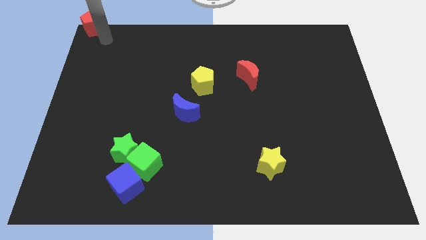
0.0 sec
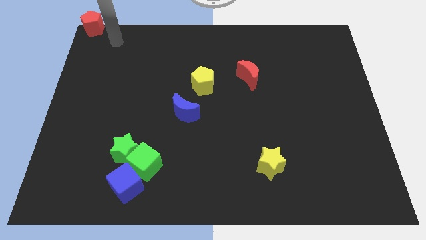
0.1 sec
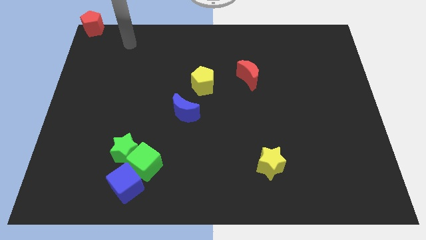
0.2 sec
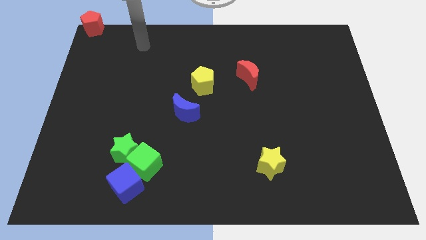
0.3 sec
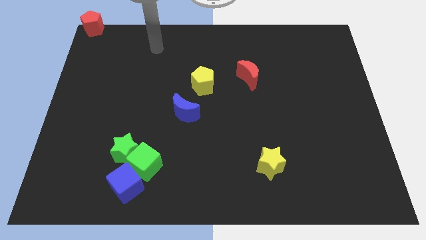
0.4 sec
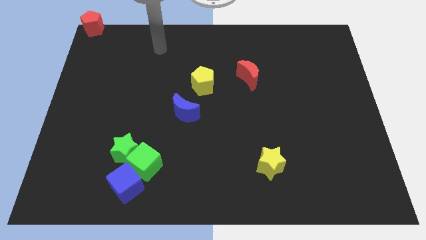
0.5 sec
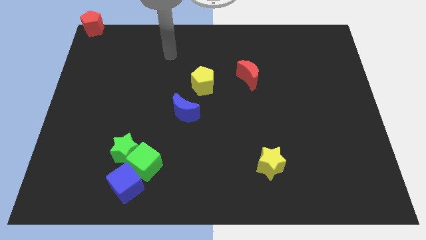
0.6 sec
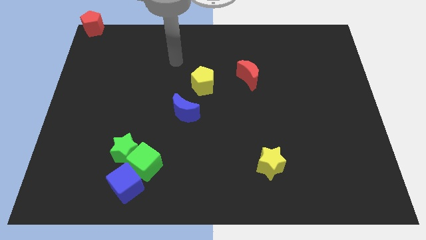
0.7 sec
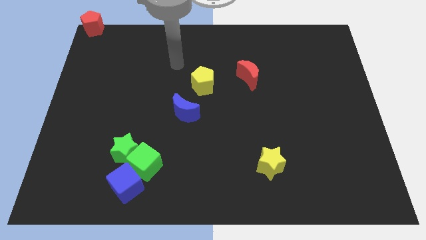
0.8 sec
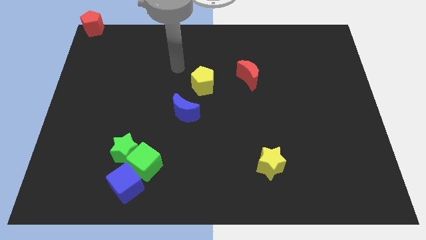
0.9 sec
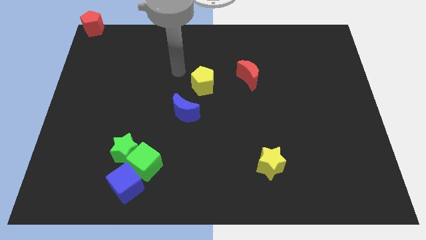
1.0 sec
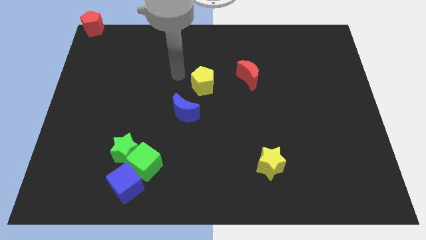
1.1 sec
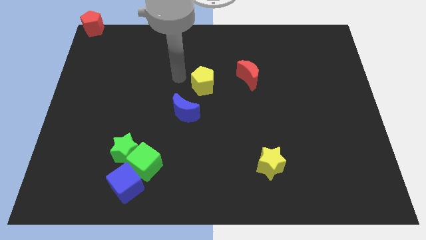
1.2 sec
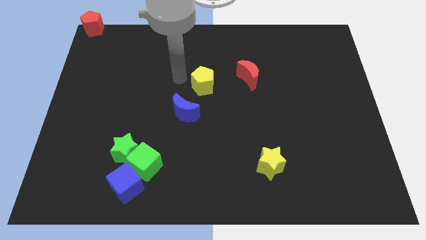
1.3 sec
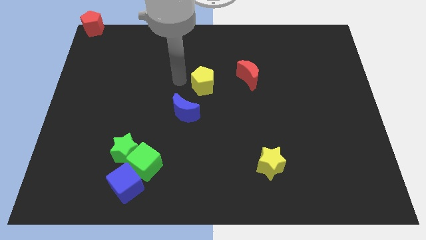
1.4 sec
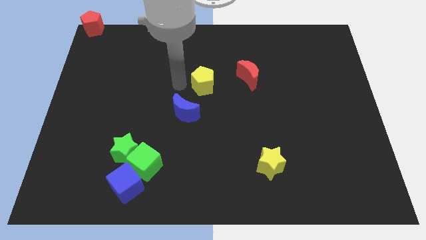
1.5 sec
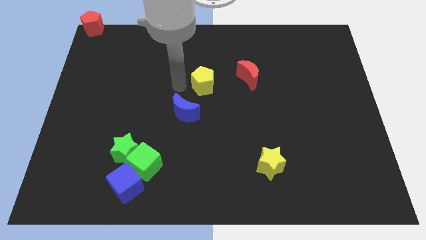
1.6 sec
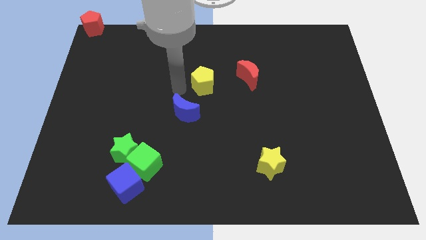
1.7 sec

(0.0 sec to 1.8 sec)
move the arm to the left of the yellow pentagon

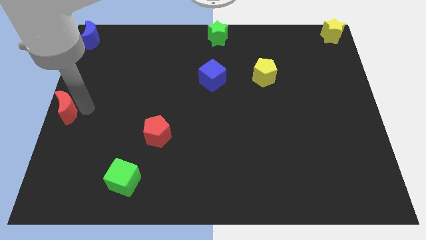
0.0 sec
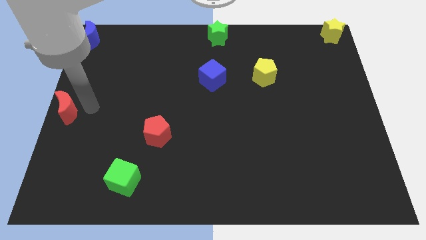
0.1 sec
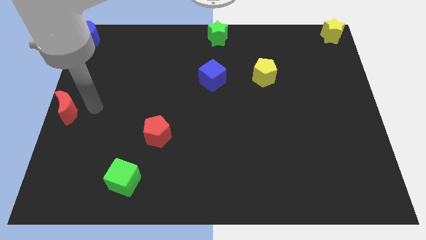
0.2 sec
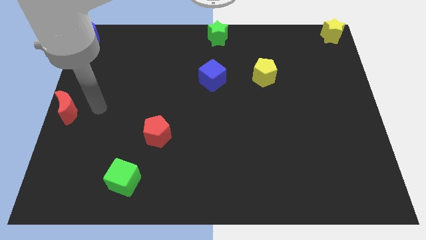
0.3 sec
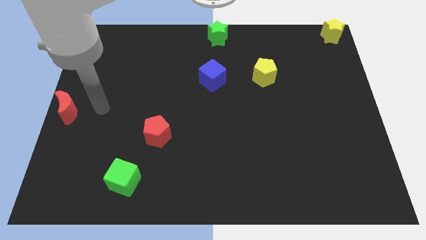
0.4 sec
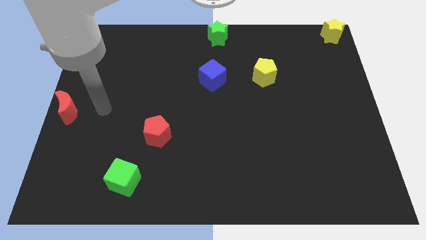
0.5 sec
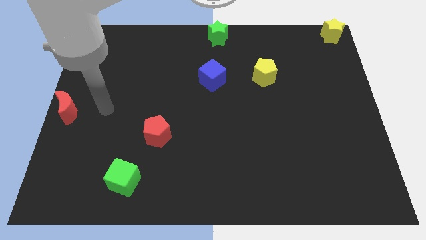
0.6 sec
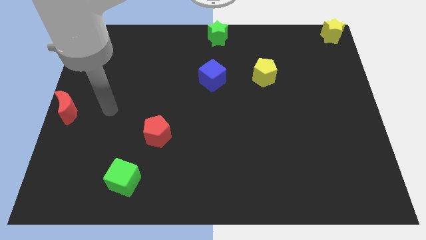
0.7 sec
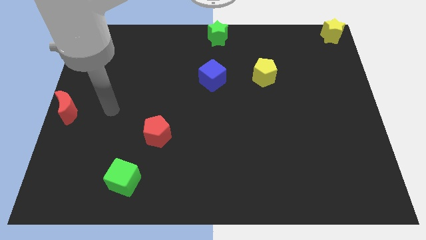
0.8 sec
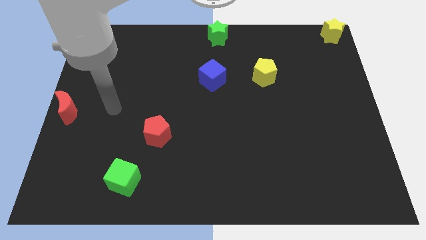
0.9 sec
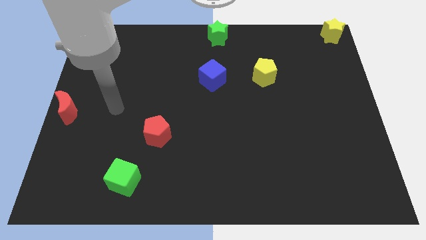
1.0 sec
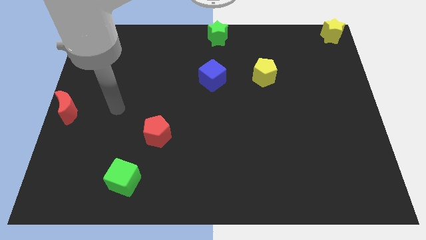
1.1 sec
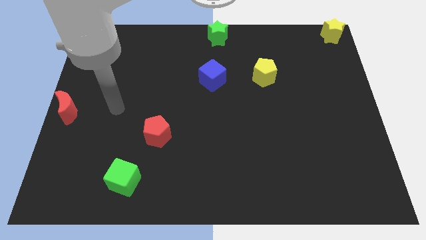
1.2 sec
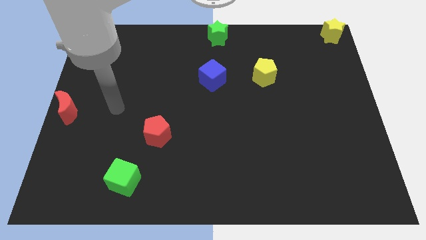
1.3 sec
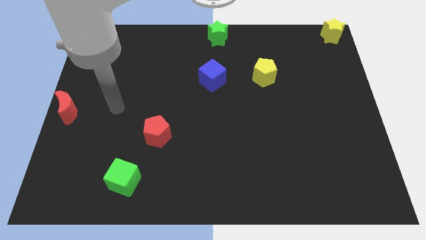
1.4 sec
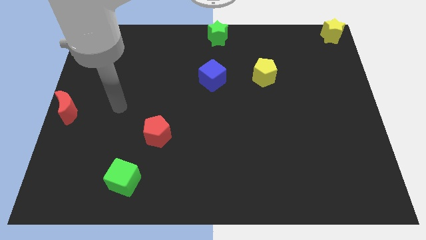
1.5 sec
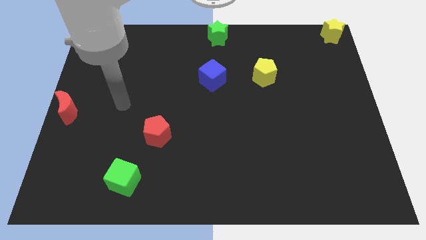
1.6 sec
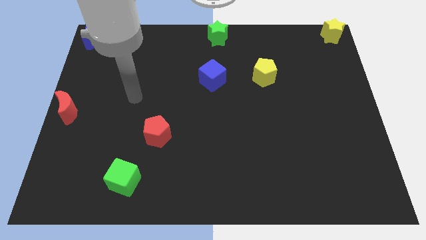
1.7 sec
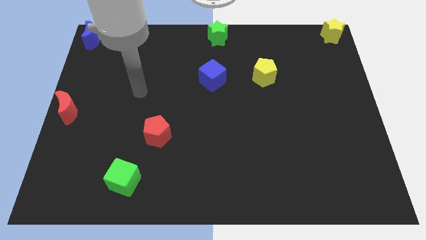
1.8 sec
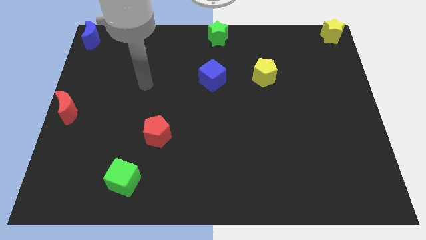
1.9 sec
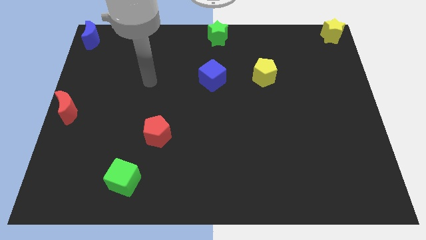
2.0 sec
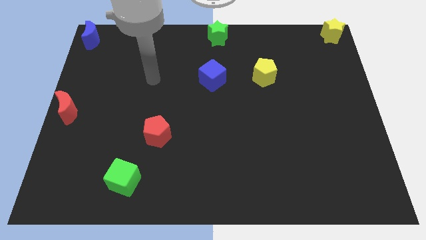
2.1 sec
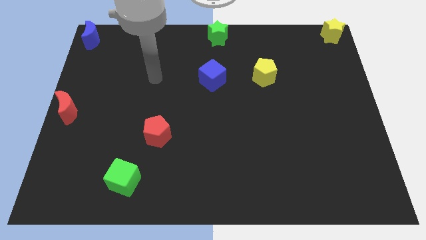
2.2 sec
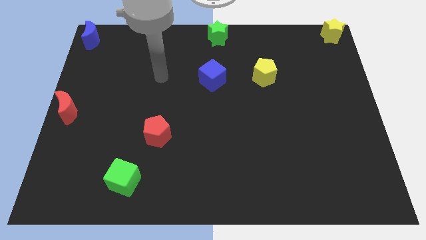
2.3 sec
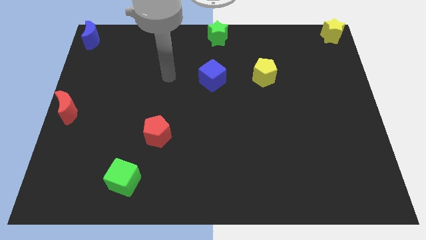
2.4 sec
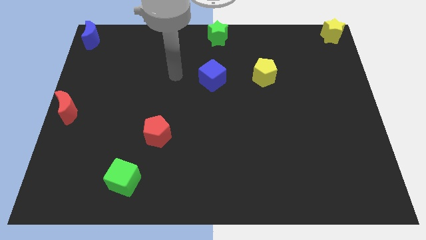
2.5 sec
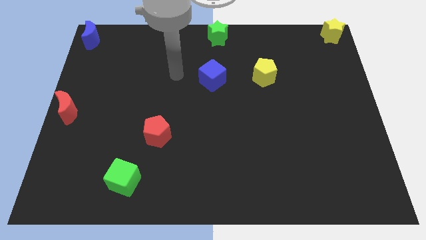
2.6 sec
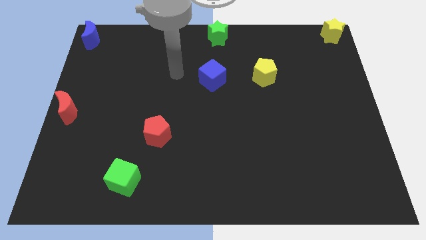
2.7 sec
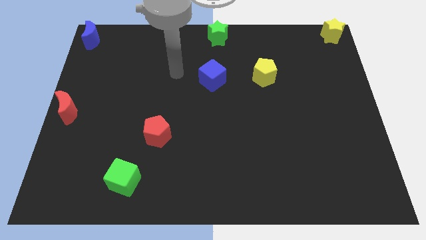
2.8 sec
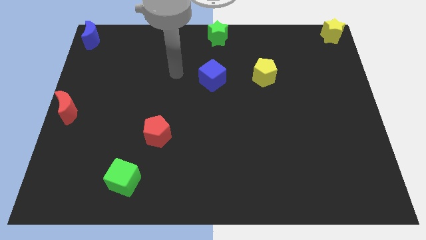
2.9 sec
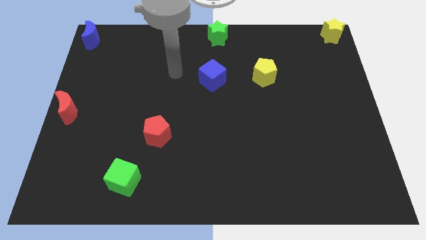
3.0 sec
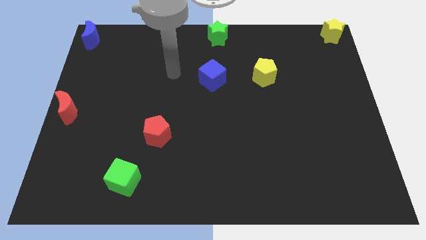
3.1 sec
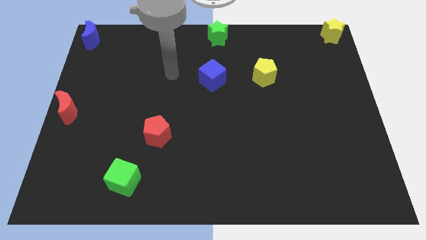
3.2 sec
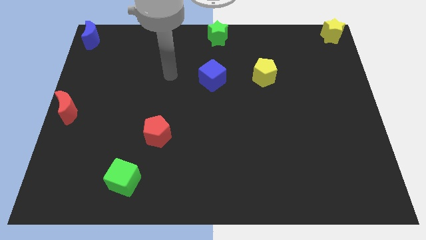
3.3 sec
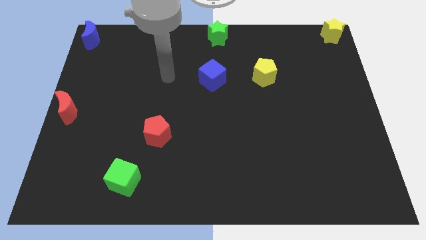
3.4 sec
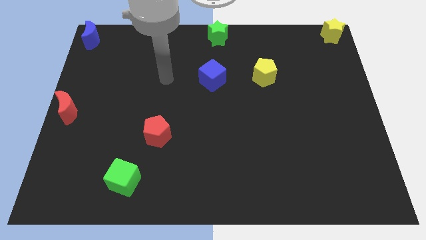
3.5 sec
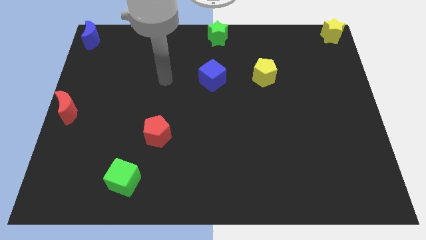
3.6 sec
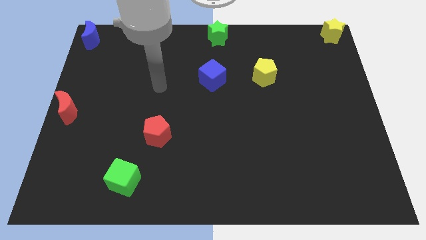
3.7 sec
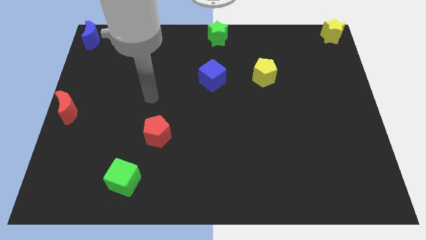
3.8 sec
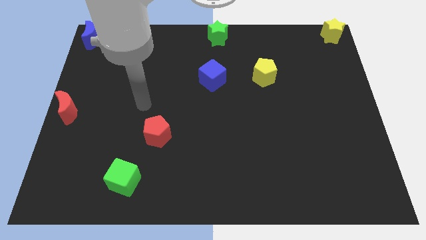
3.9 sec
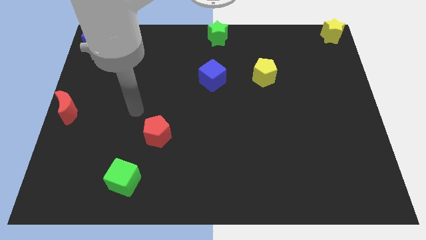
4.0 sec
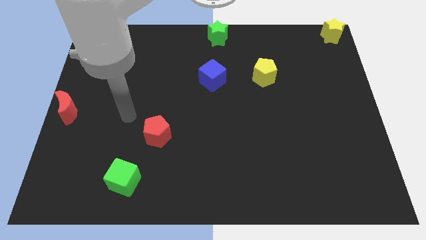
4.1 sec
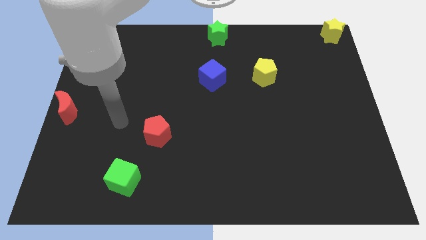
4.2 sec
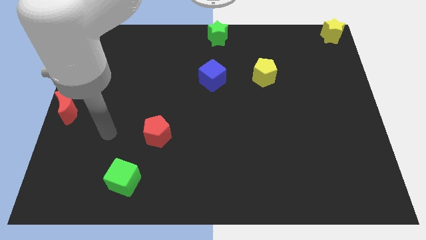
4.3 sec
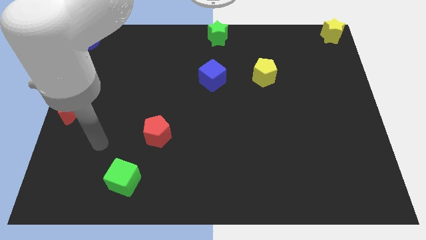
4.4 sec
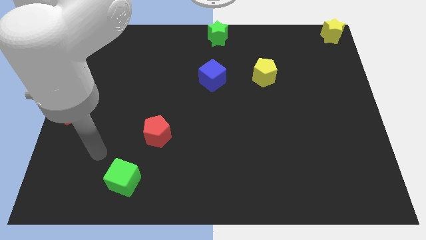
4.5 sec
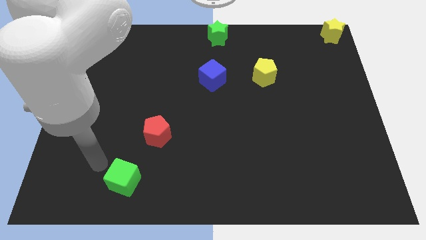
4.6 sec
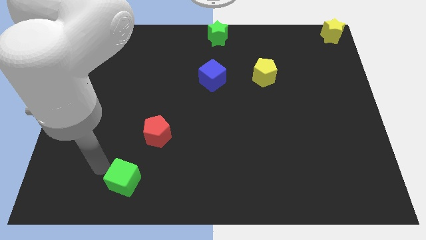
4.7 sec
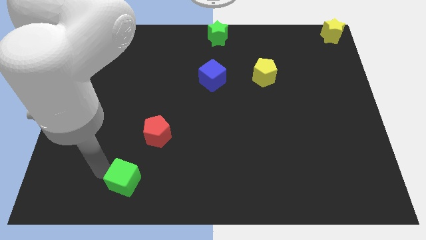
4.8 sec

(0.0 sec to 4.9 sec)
move the arm left to the green cube

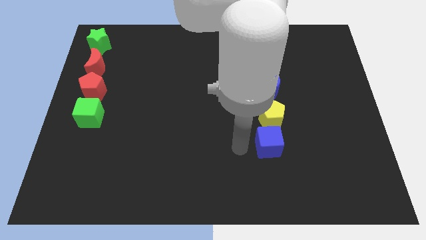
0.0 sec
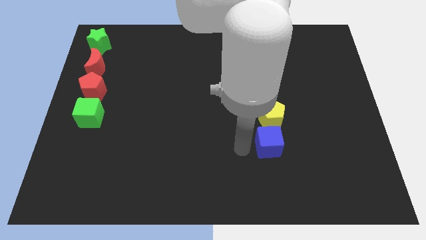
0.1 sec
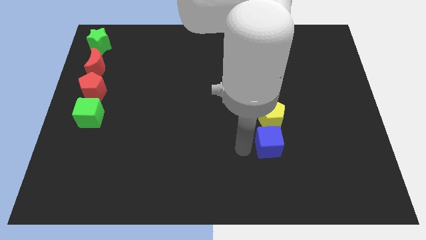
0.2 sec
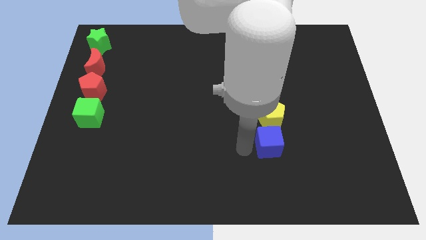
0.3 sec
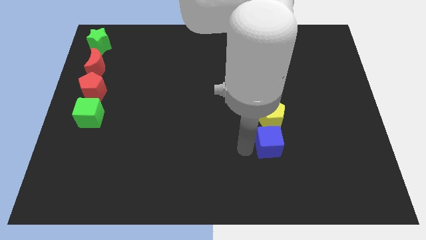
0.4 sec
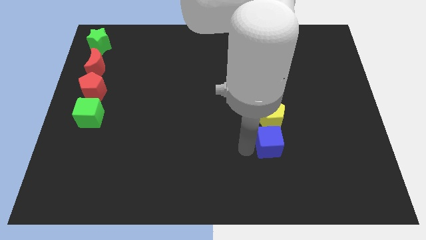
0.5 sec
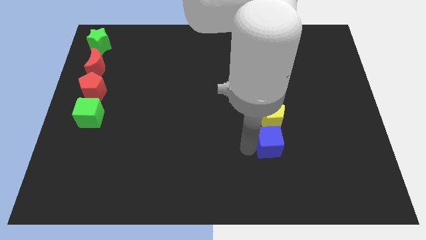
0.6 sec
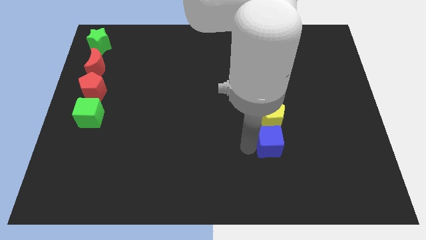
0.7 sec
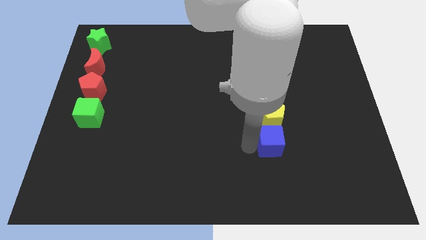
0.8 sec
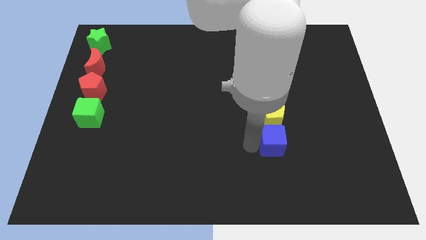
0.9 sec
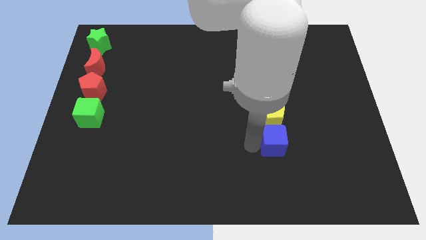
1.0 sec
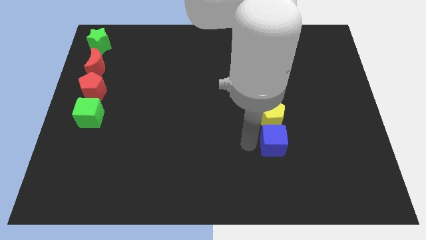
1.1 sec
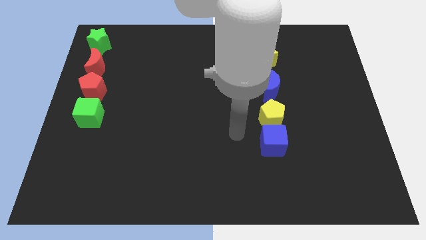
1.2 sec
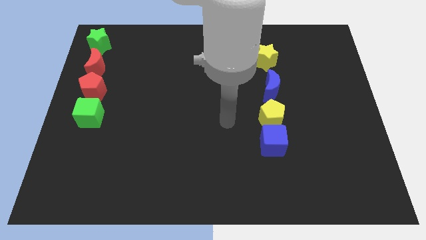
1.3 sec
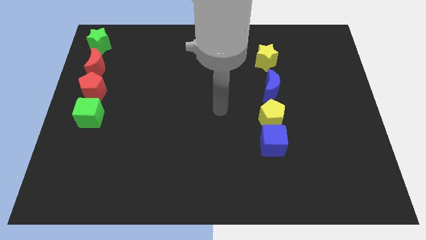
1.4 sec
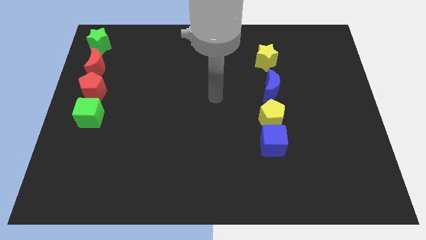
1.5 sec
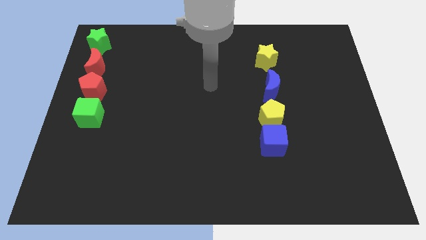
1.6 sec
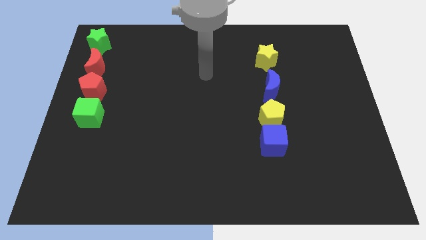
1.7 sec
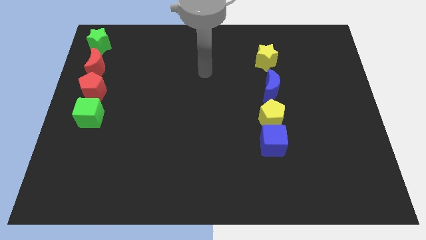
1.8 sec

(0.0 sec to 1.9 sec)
push the blue cube below the yellow pentagon

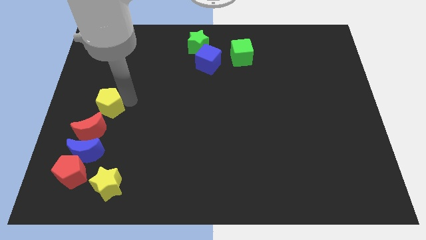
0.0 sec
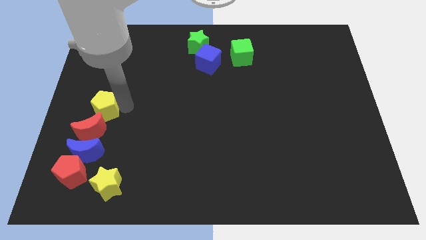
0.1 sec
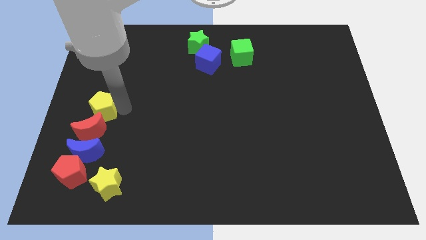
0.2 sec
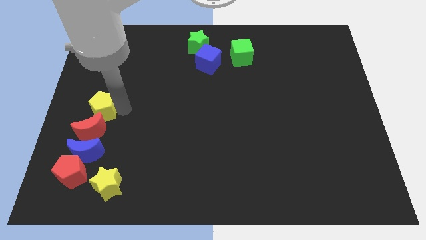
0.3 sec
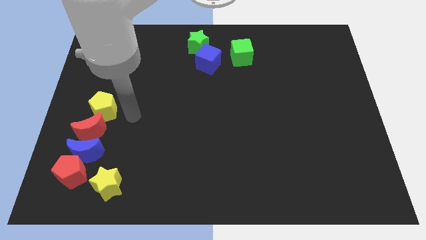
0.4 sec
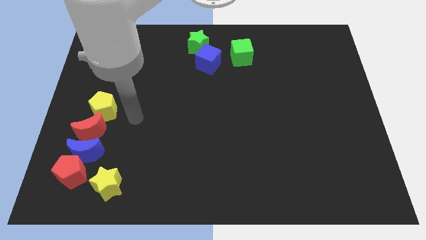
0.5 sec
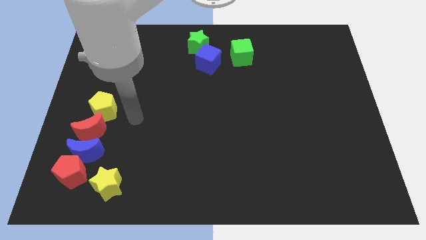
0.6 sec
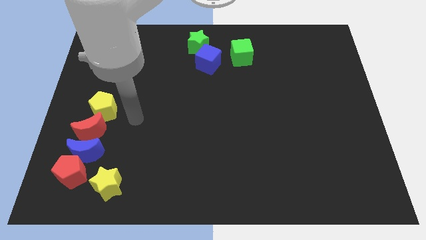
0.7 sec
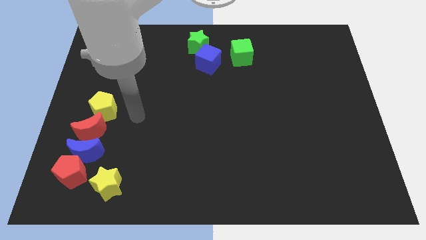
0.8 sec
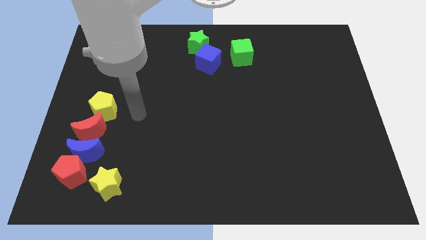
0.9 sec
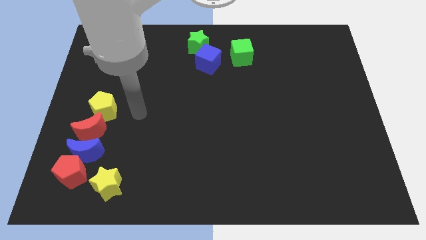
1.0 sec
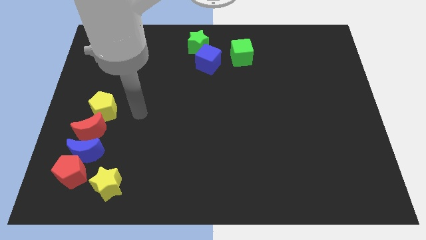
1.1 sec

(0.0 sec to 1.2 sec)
slide the arm to the right of the yellow pentagon
